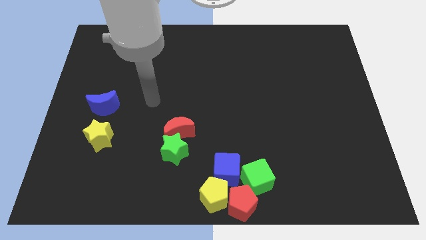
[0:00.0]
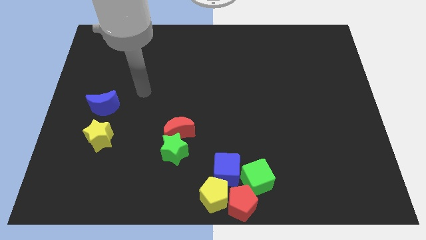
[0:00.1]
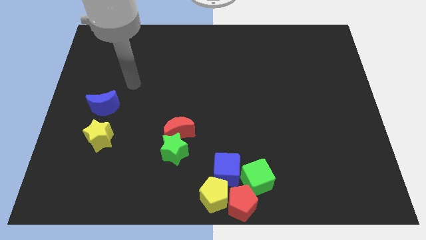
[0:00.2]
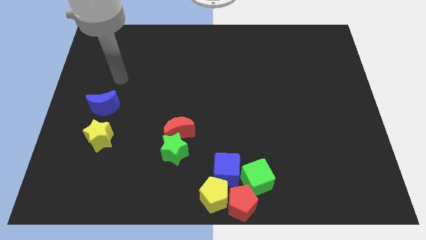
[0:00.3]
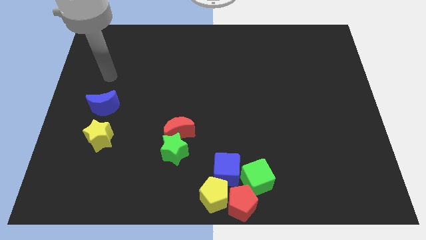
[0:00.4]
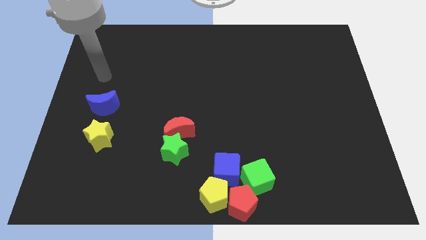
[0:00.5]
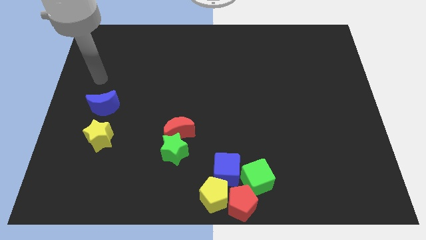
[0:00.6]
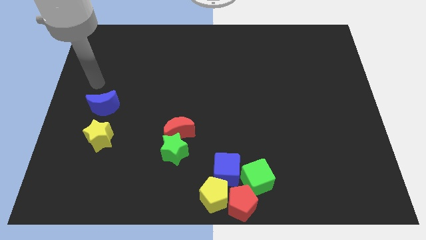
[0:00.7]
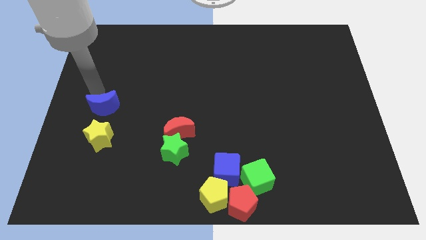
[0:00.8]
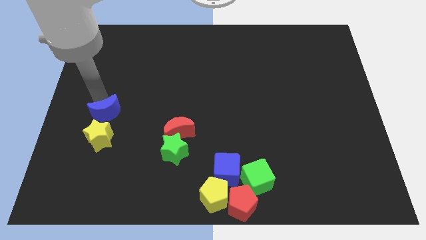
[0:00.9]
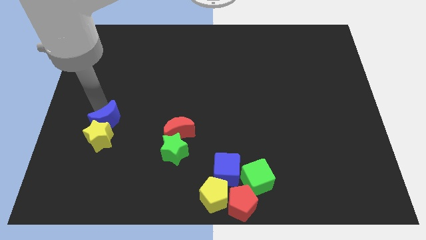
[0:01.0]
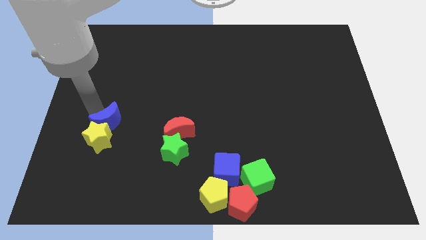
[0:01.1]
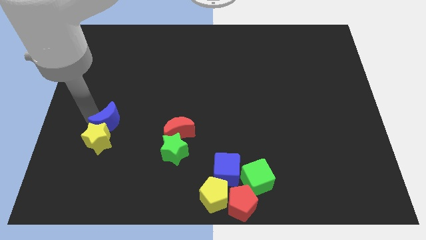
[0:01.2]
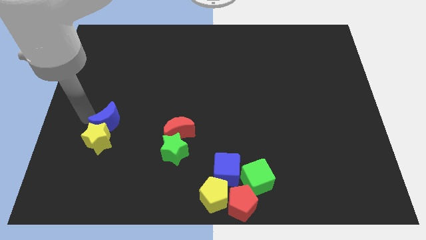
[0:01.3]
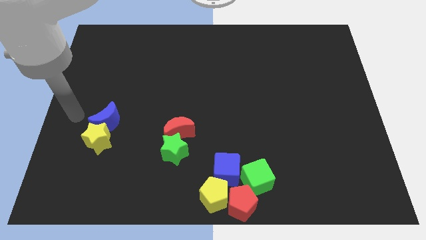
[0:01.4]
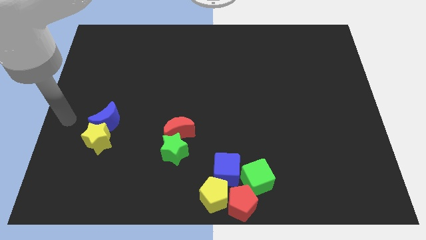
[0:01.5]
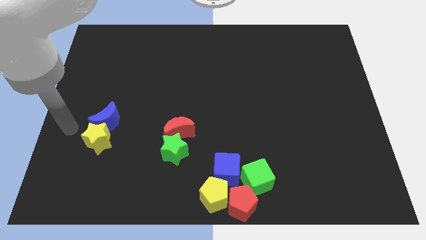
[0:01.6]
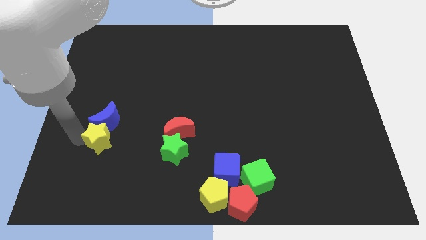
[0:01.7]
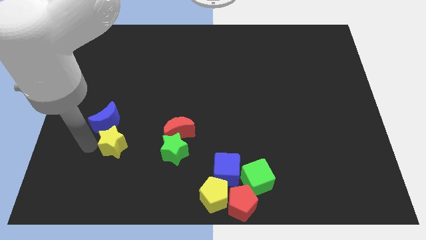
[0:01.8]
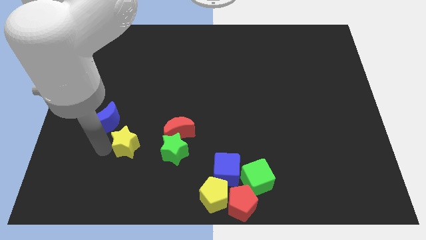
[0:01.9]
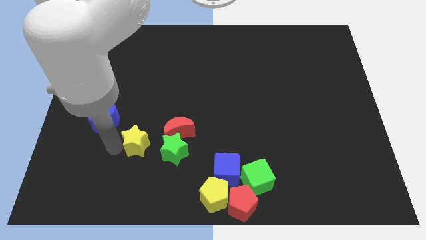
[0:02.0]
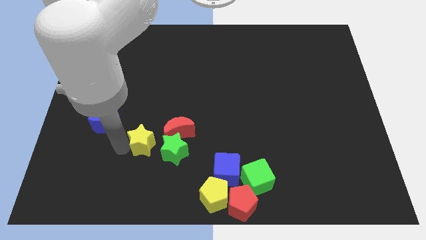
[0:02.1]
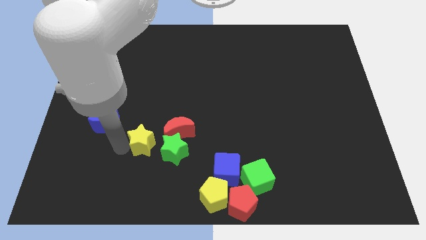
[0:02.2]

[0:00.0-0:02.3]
move the blue moon close to yellow star

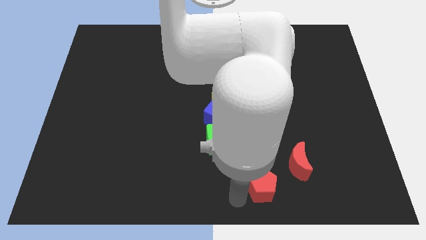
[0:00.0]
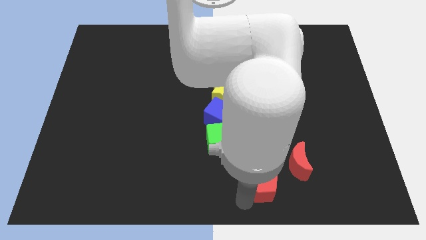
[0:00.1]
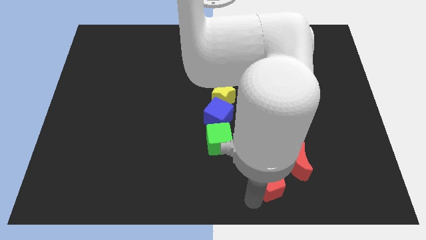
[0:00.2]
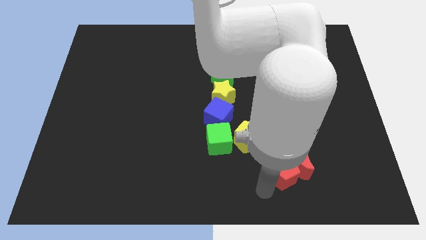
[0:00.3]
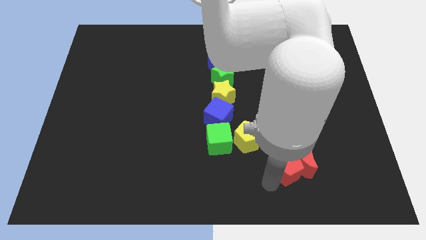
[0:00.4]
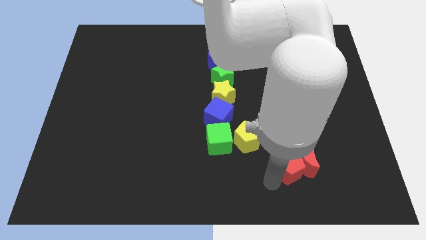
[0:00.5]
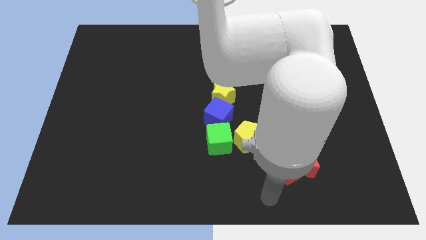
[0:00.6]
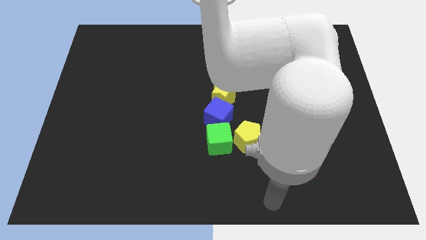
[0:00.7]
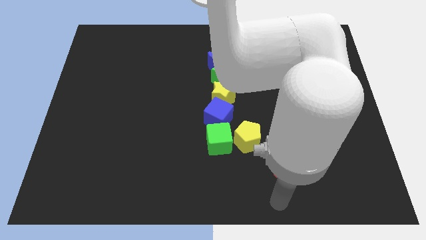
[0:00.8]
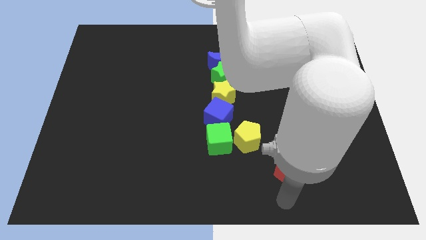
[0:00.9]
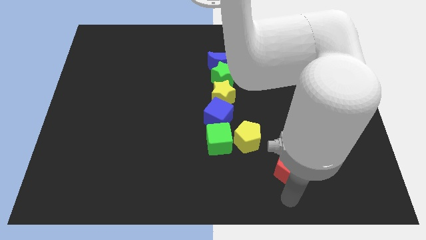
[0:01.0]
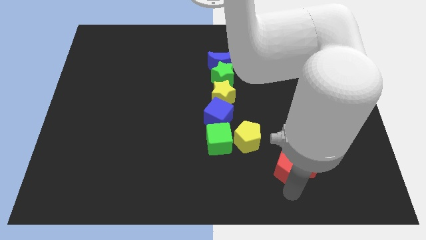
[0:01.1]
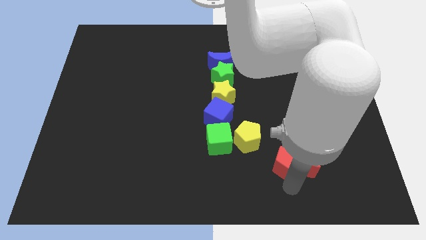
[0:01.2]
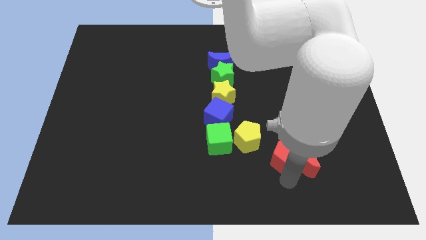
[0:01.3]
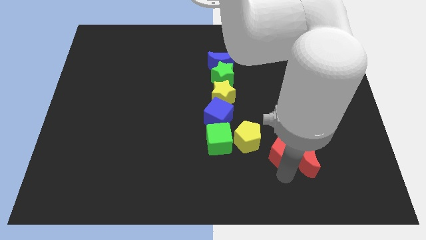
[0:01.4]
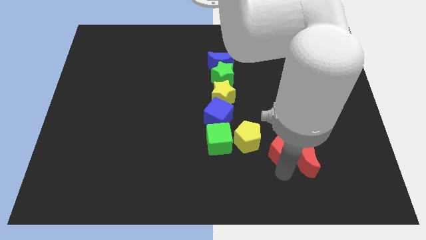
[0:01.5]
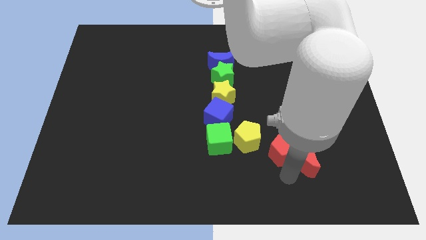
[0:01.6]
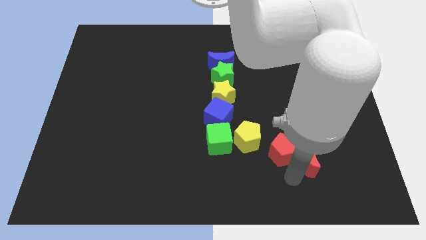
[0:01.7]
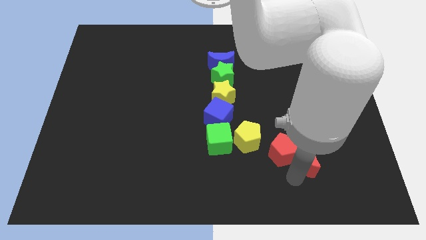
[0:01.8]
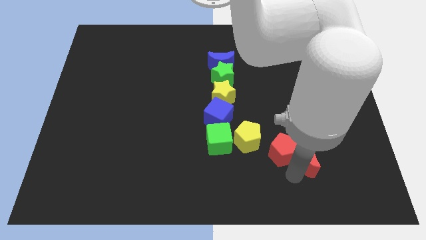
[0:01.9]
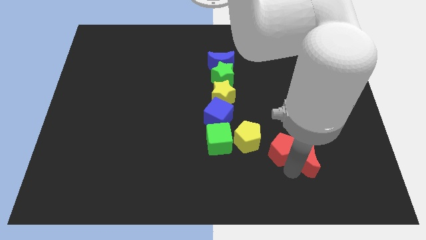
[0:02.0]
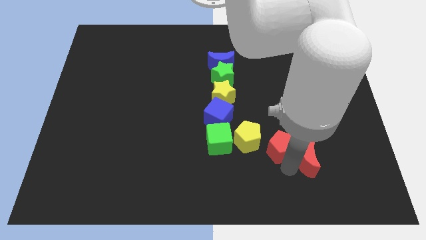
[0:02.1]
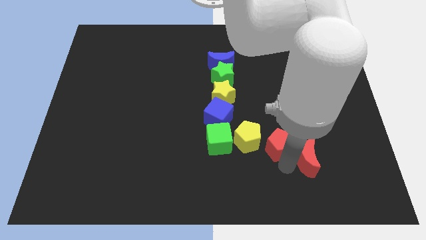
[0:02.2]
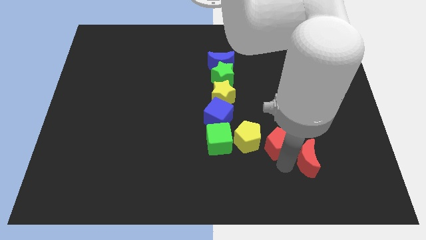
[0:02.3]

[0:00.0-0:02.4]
push the red pentagon to the right of yellow pentagon

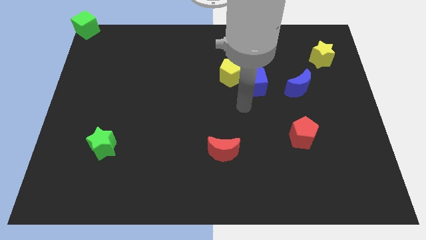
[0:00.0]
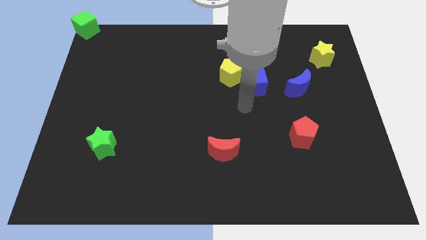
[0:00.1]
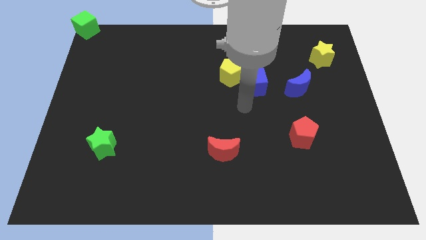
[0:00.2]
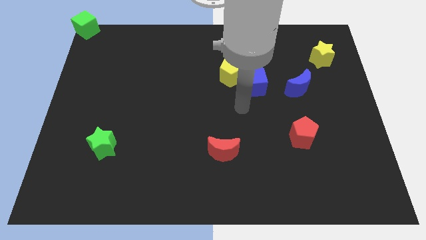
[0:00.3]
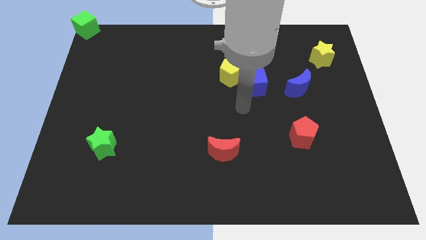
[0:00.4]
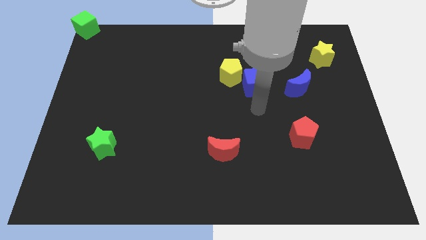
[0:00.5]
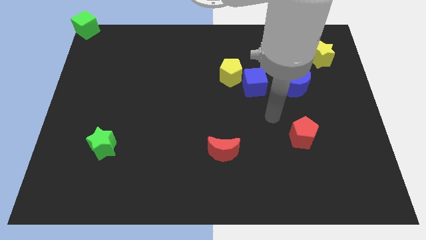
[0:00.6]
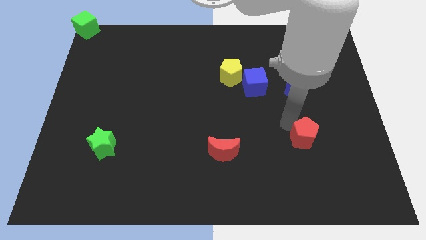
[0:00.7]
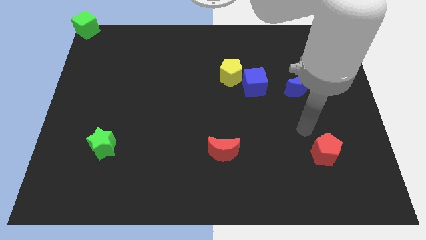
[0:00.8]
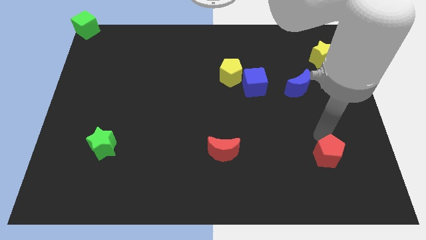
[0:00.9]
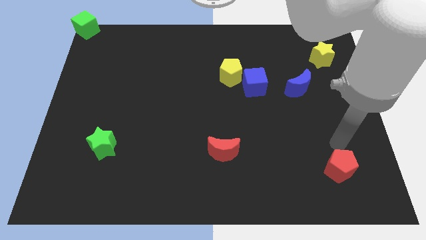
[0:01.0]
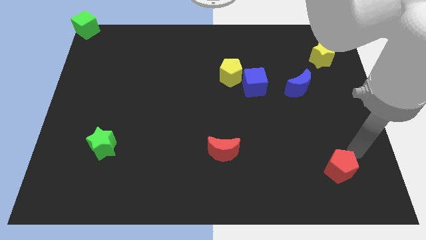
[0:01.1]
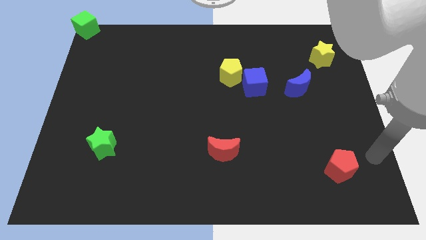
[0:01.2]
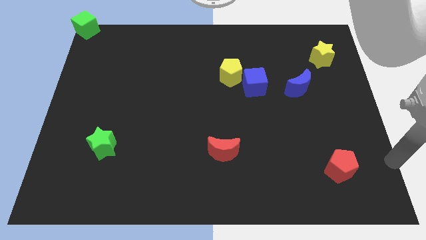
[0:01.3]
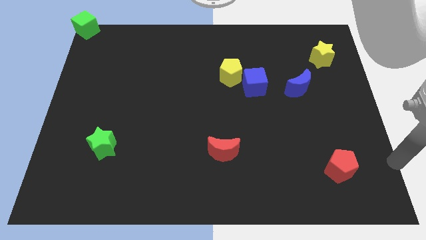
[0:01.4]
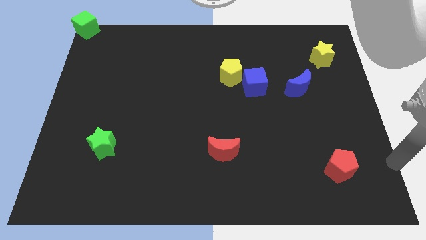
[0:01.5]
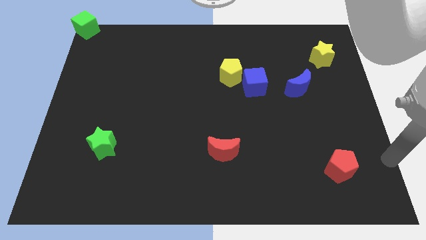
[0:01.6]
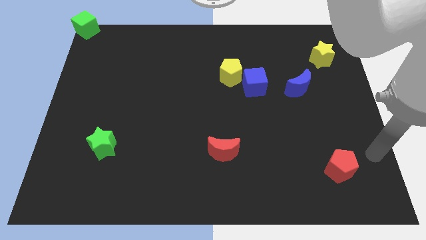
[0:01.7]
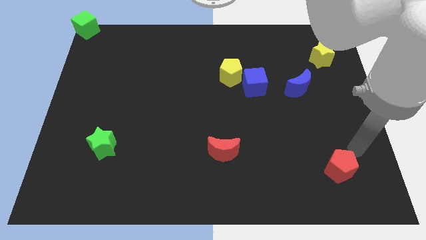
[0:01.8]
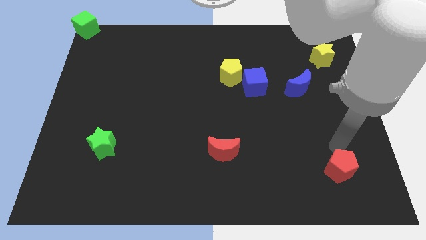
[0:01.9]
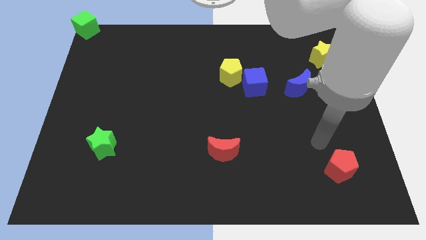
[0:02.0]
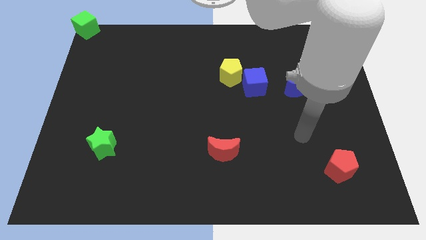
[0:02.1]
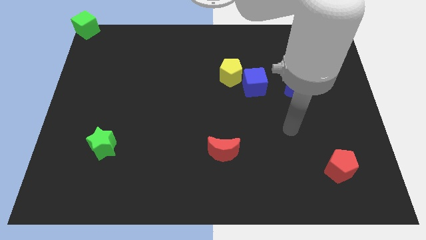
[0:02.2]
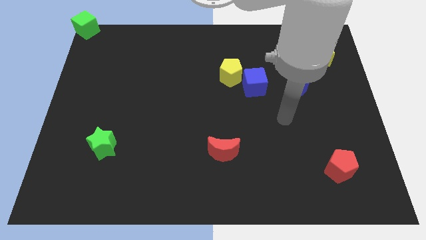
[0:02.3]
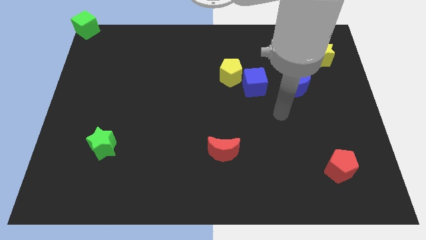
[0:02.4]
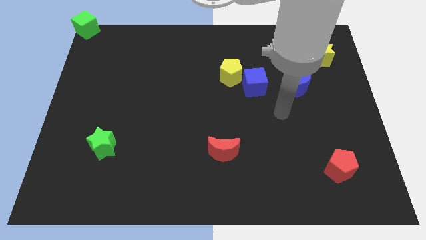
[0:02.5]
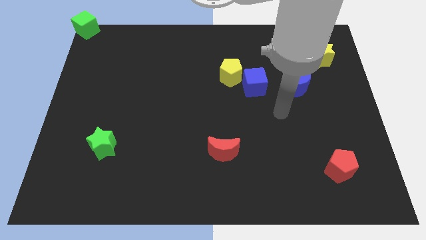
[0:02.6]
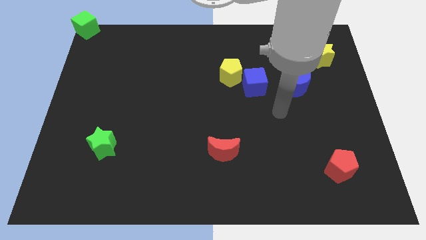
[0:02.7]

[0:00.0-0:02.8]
move the red pentagon to the bottom right

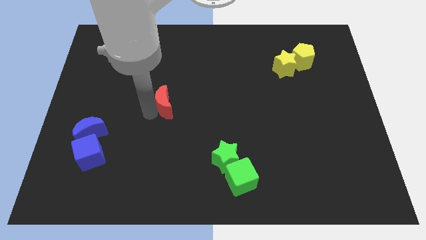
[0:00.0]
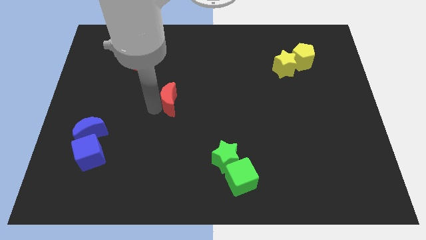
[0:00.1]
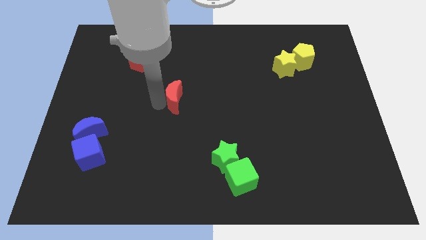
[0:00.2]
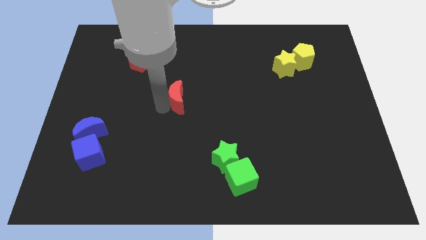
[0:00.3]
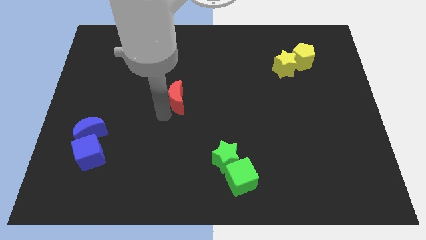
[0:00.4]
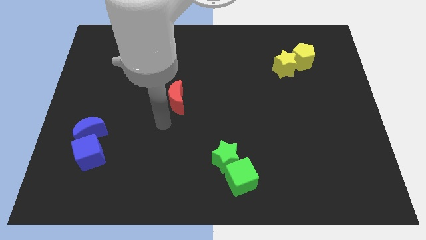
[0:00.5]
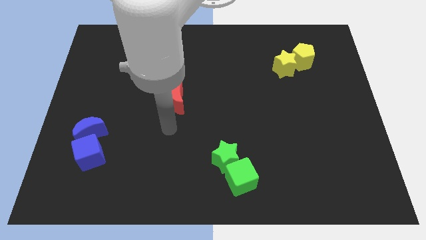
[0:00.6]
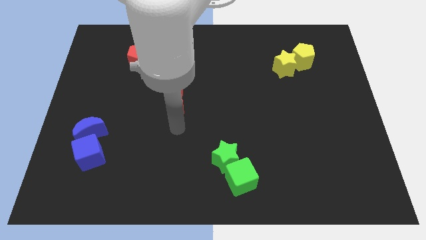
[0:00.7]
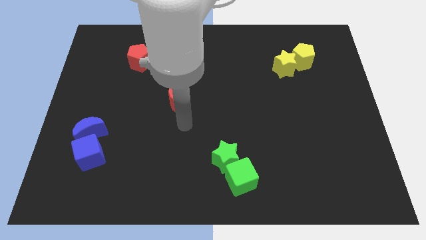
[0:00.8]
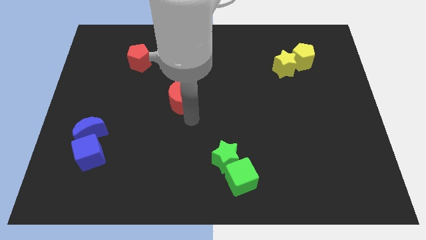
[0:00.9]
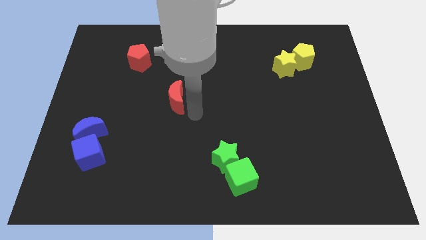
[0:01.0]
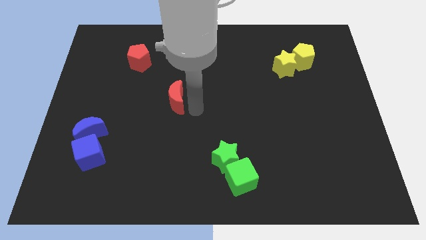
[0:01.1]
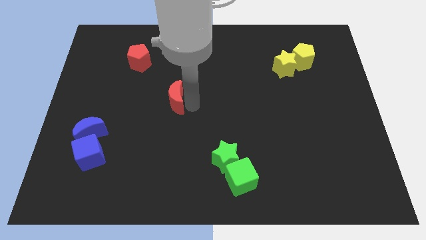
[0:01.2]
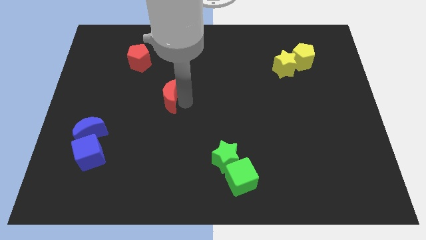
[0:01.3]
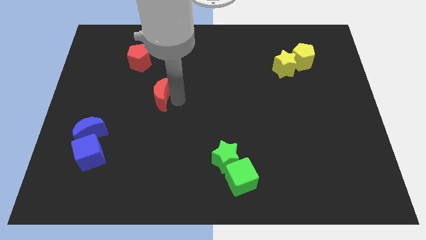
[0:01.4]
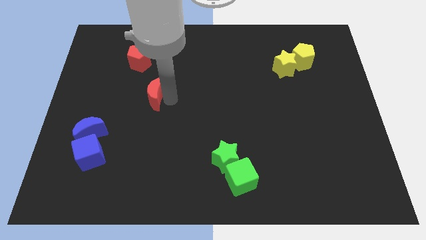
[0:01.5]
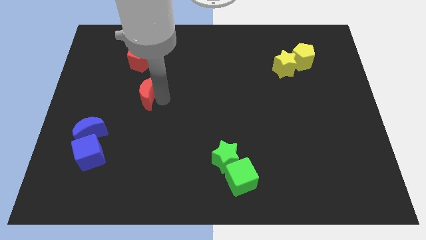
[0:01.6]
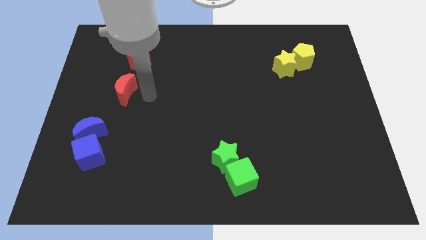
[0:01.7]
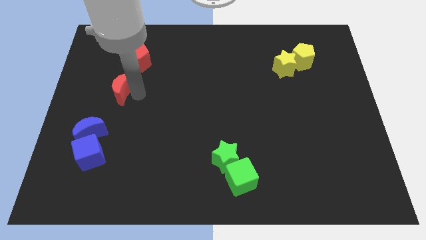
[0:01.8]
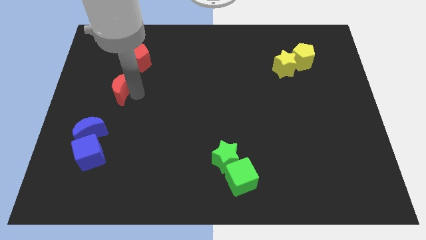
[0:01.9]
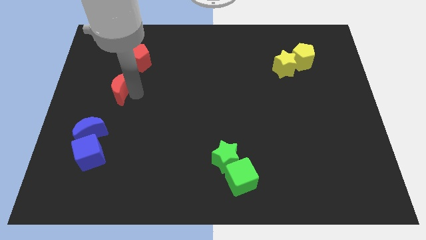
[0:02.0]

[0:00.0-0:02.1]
move red moon vertical below to red pentagon
